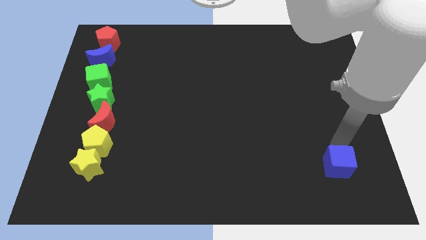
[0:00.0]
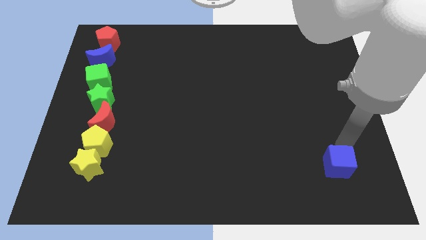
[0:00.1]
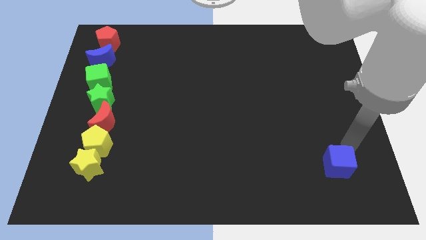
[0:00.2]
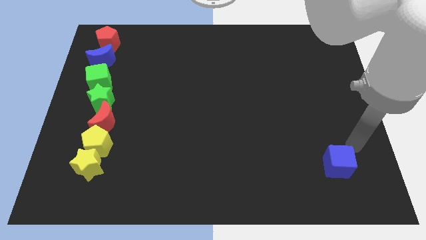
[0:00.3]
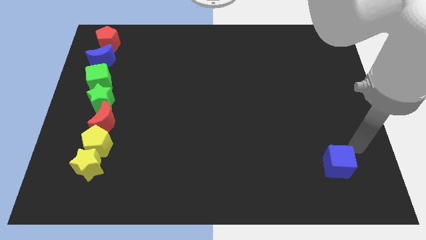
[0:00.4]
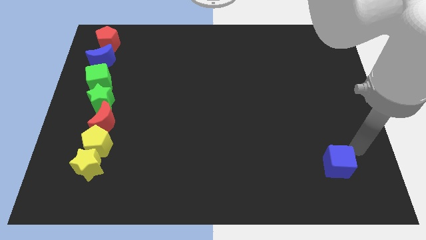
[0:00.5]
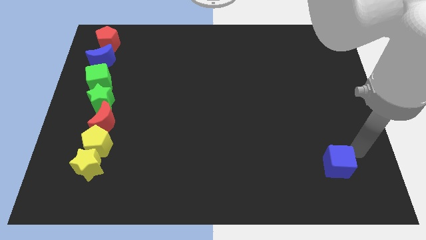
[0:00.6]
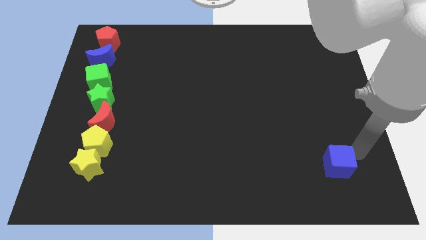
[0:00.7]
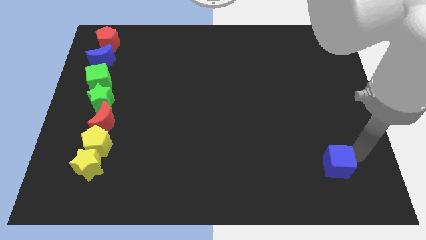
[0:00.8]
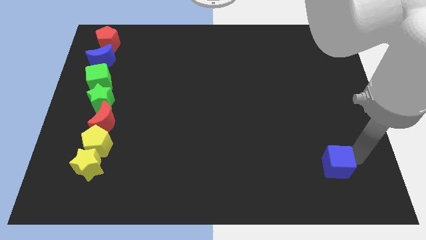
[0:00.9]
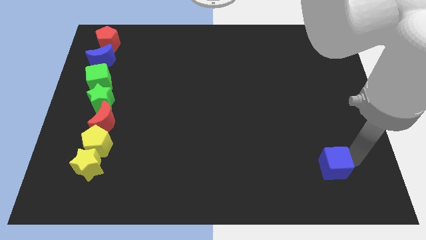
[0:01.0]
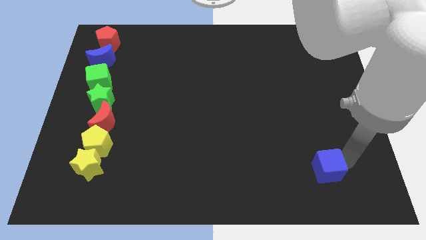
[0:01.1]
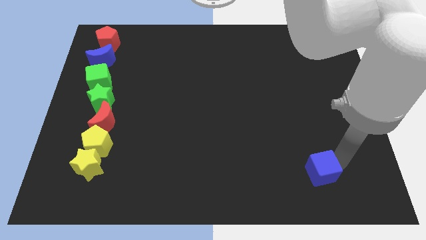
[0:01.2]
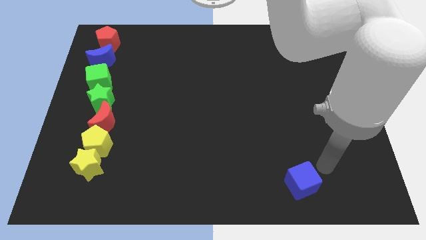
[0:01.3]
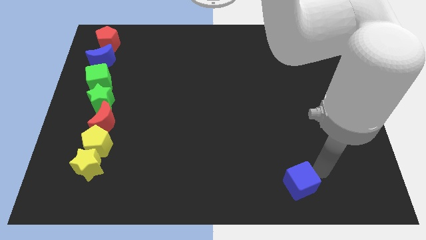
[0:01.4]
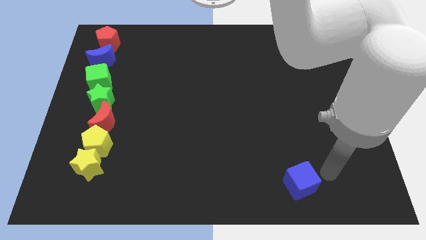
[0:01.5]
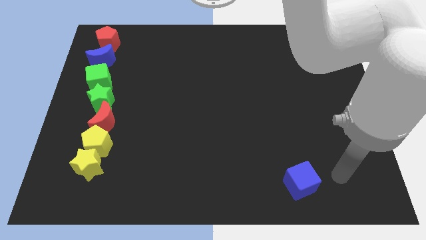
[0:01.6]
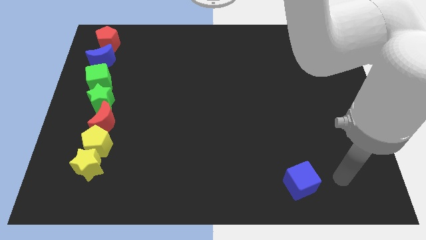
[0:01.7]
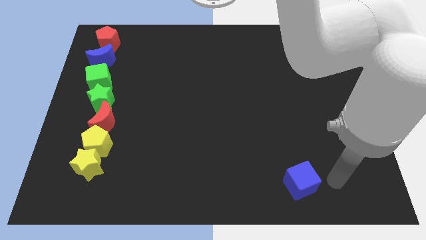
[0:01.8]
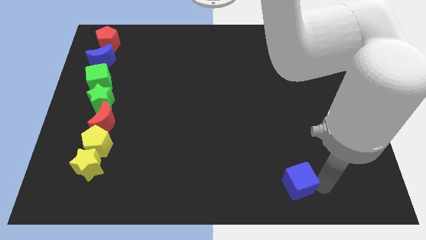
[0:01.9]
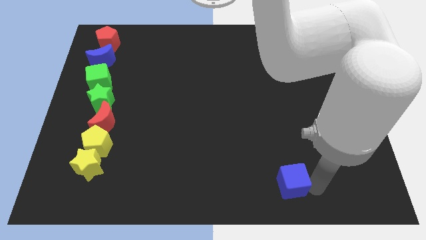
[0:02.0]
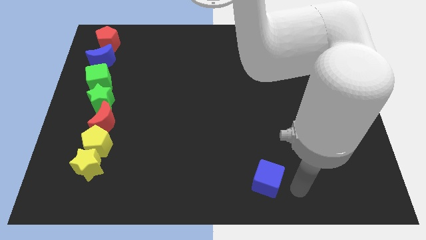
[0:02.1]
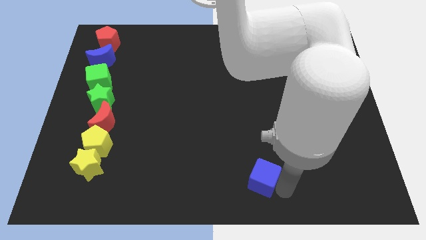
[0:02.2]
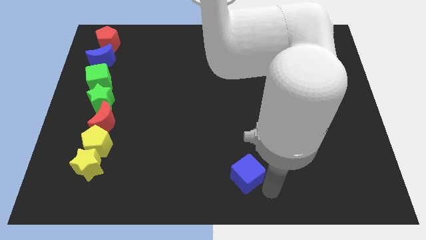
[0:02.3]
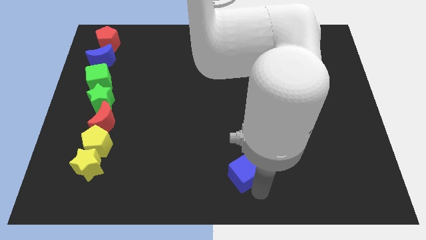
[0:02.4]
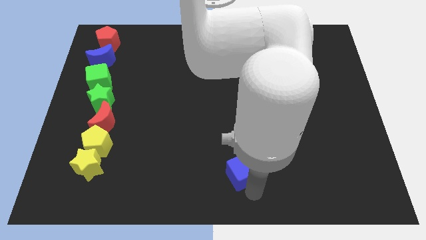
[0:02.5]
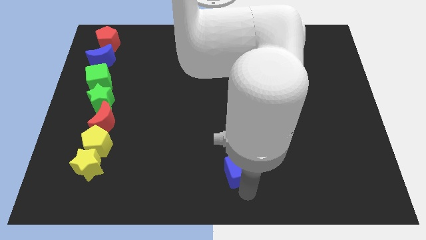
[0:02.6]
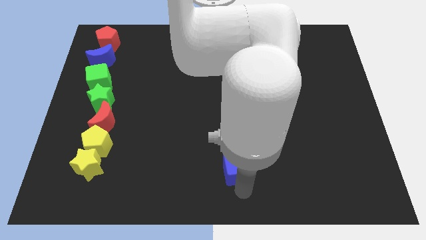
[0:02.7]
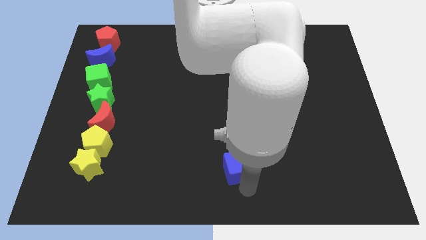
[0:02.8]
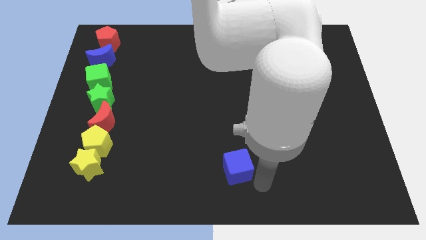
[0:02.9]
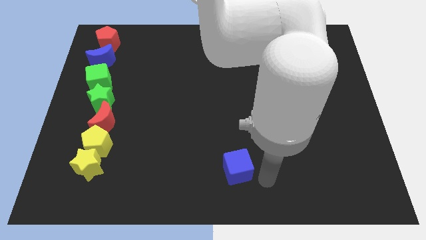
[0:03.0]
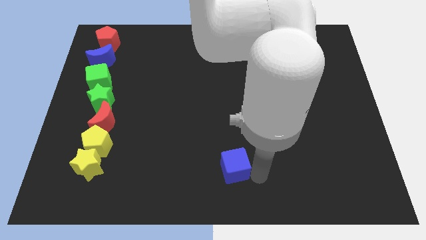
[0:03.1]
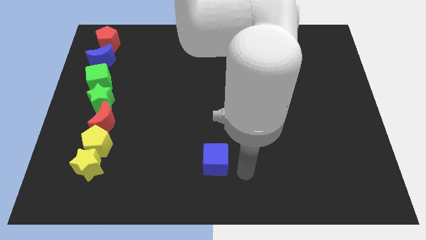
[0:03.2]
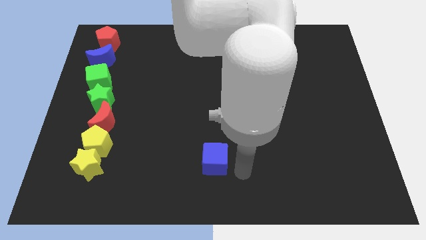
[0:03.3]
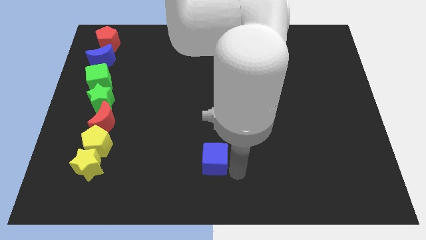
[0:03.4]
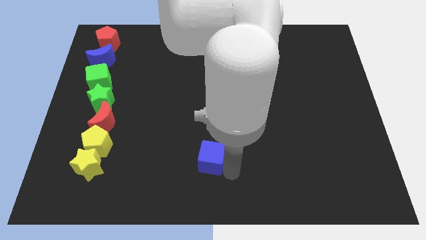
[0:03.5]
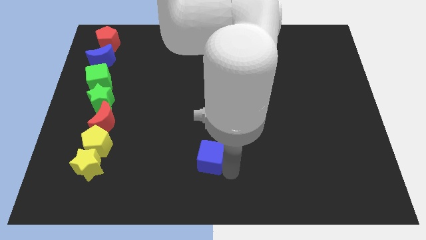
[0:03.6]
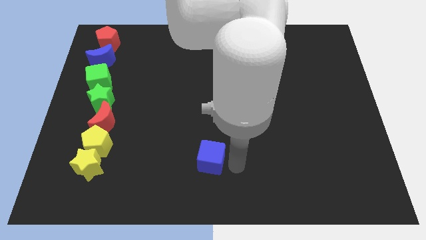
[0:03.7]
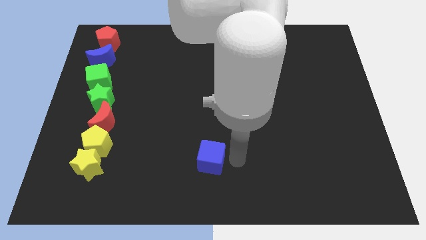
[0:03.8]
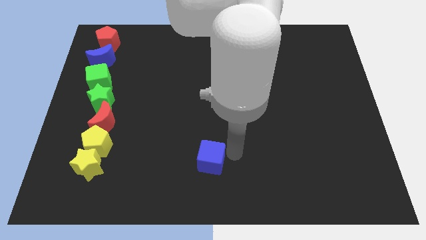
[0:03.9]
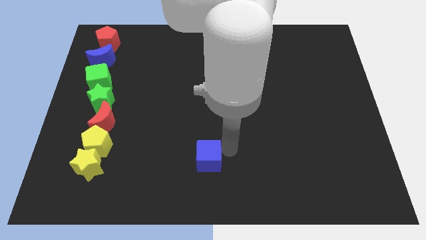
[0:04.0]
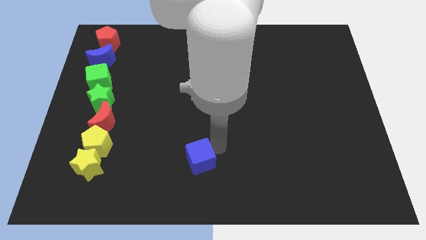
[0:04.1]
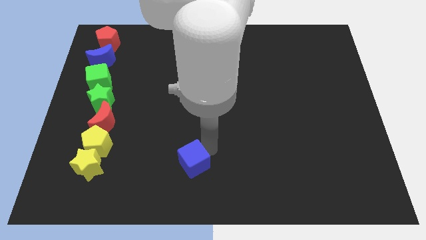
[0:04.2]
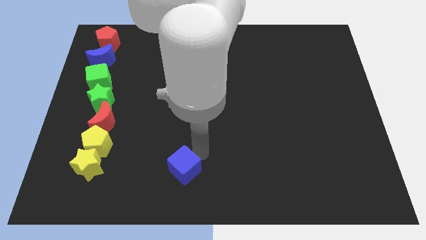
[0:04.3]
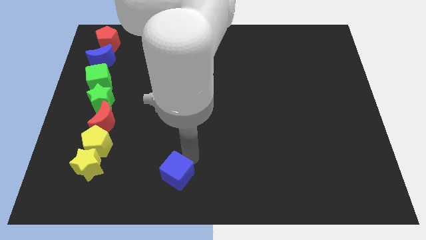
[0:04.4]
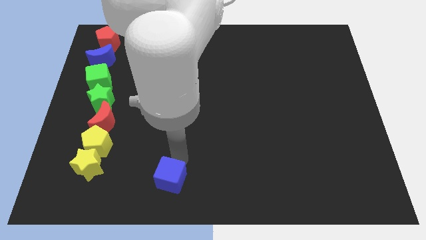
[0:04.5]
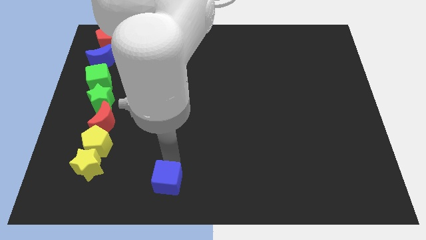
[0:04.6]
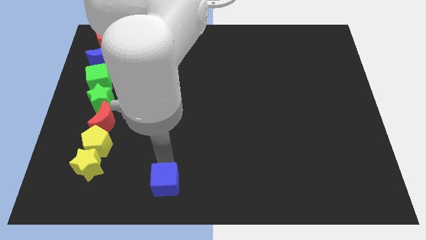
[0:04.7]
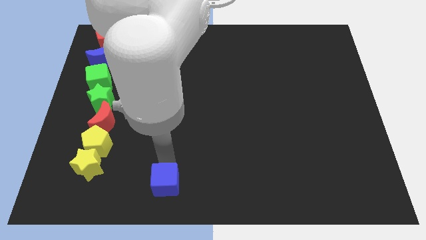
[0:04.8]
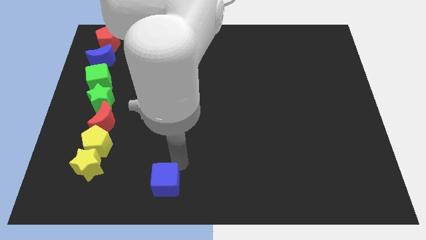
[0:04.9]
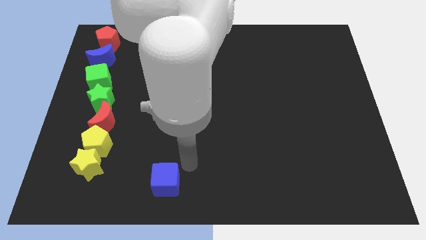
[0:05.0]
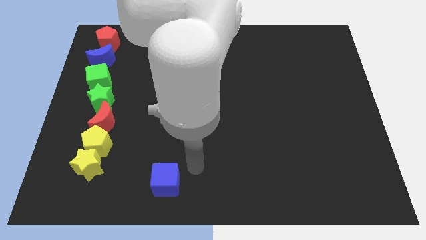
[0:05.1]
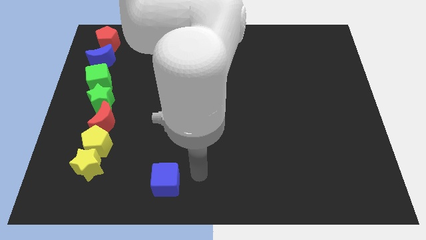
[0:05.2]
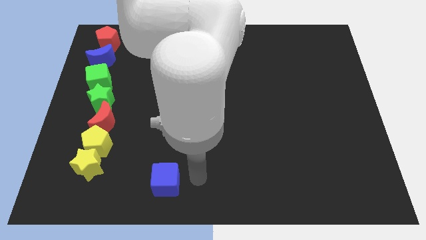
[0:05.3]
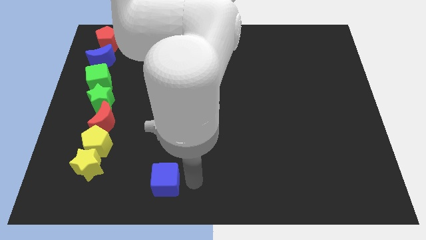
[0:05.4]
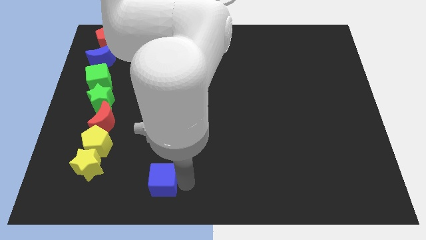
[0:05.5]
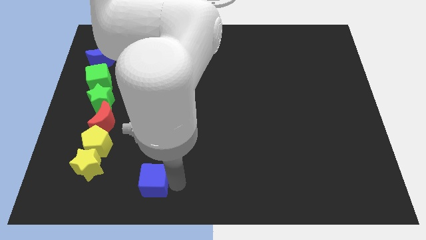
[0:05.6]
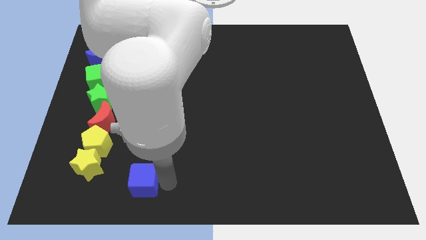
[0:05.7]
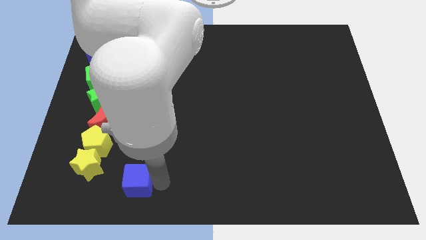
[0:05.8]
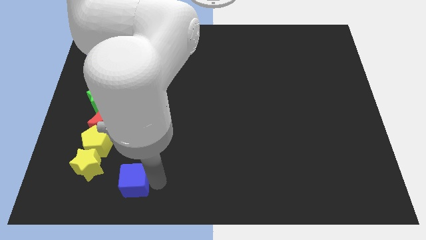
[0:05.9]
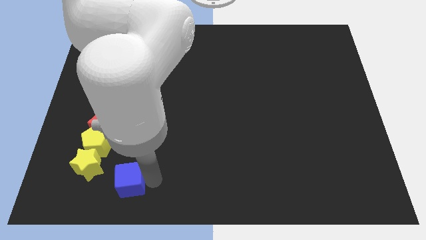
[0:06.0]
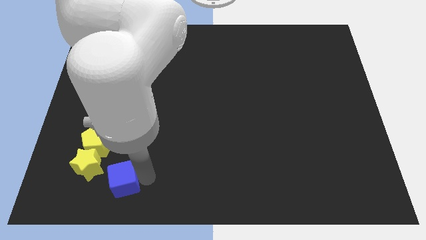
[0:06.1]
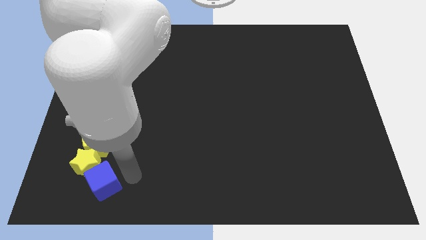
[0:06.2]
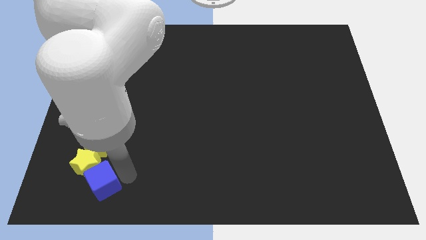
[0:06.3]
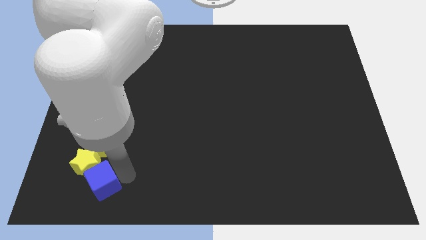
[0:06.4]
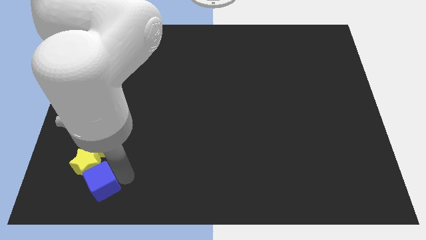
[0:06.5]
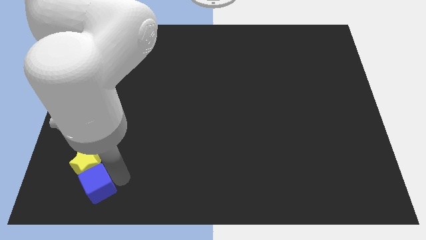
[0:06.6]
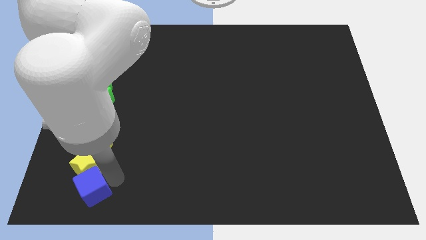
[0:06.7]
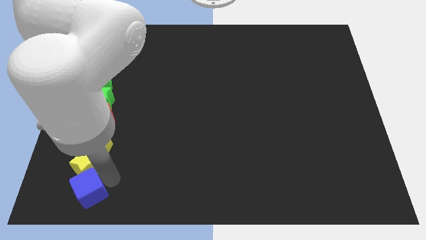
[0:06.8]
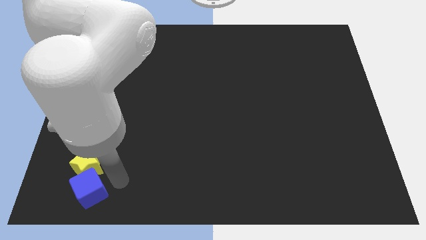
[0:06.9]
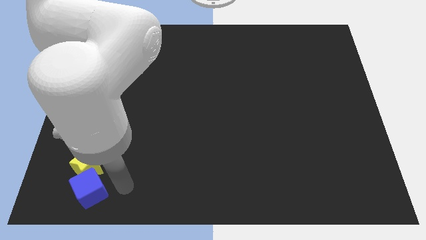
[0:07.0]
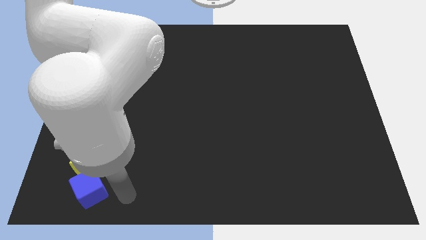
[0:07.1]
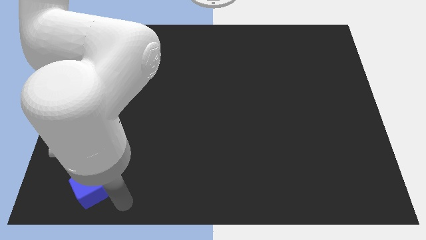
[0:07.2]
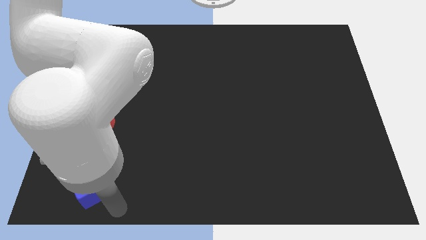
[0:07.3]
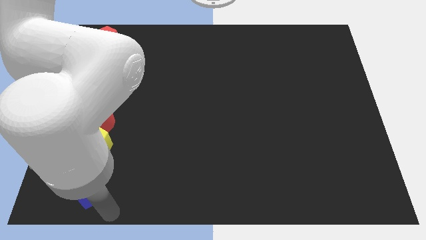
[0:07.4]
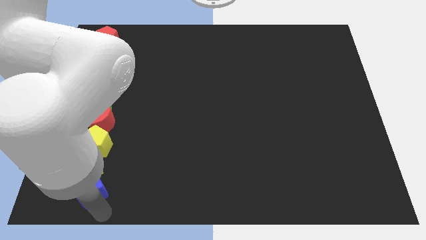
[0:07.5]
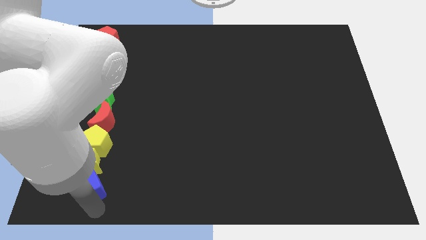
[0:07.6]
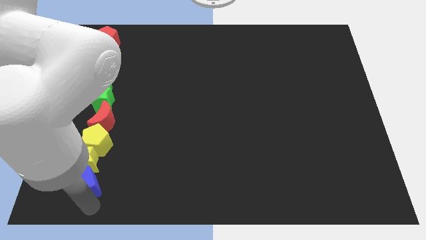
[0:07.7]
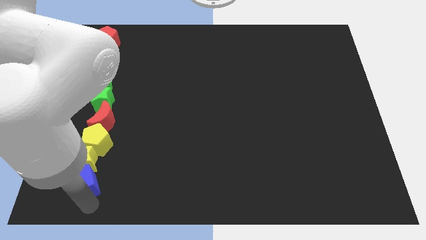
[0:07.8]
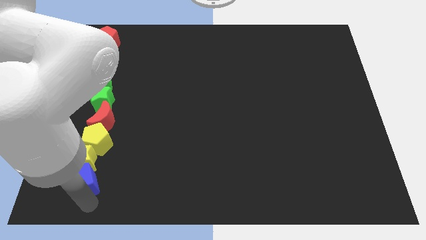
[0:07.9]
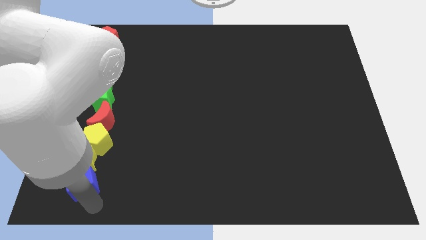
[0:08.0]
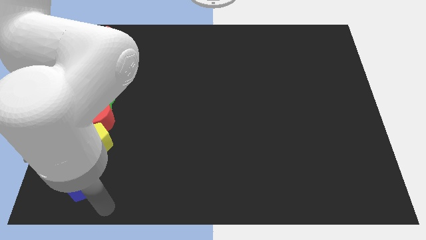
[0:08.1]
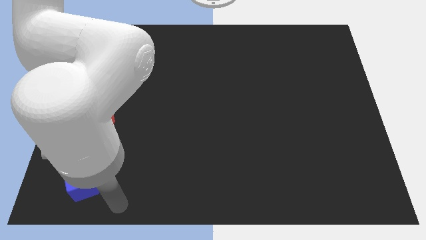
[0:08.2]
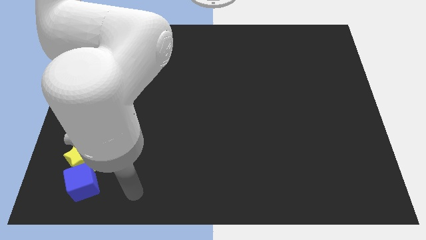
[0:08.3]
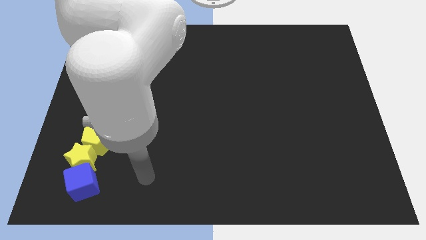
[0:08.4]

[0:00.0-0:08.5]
push blue cube below the vertical line of other blocks

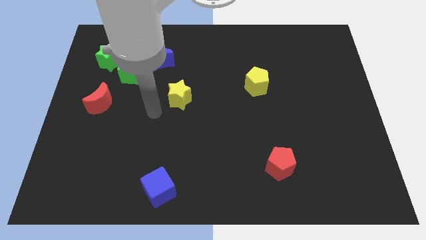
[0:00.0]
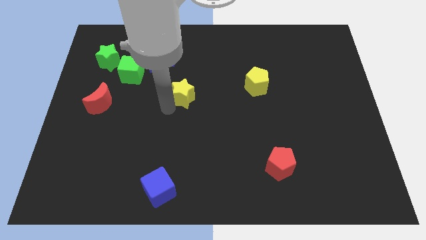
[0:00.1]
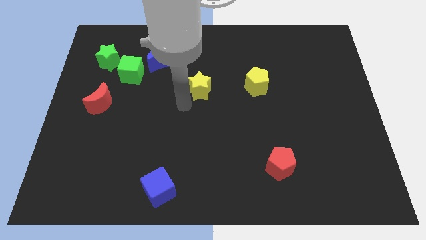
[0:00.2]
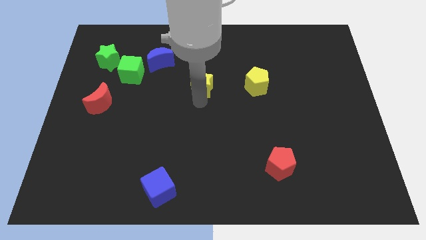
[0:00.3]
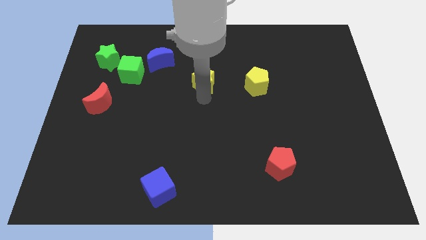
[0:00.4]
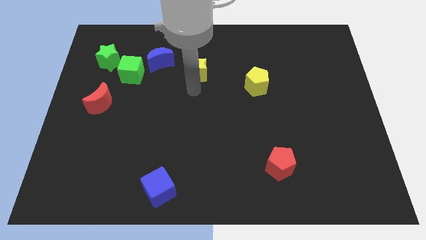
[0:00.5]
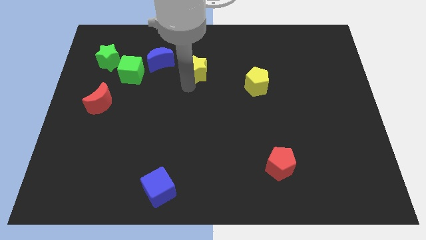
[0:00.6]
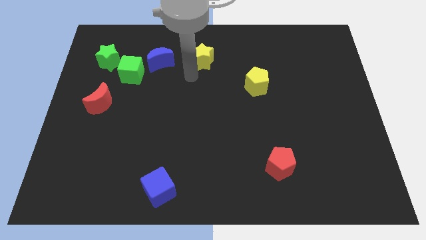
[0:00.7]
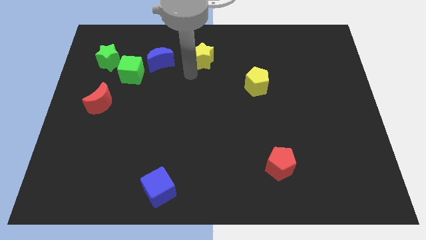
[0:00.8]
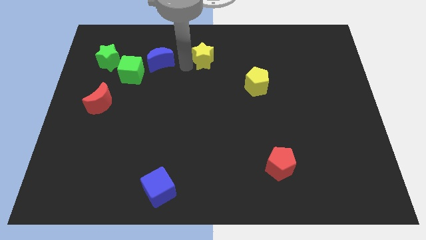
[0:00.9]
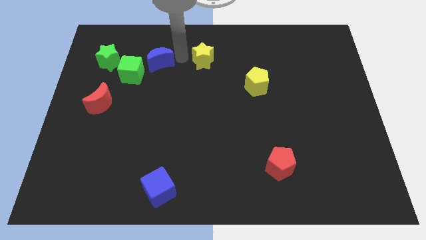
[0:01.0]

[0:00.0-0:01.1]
push the yellow star to the right of the blue crescent
